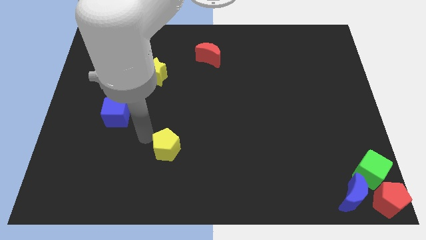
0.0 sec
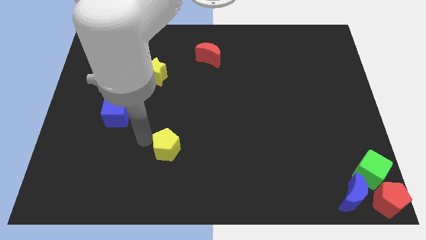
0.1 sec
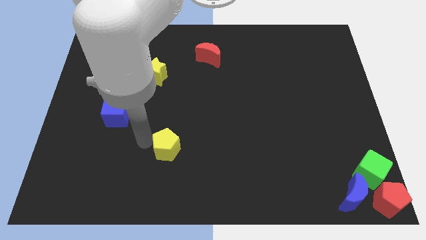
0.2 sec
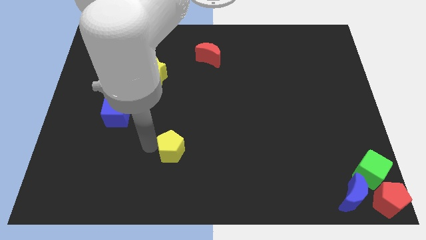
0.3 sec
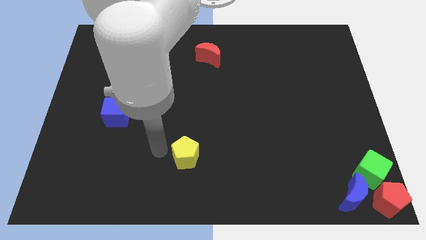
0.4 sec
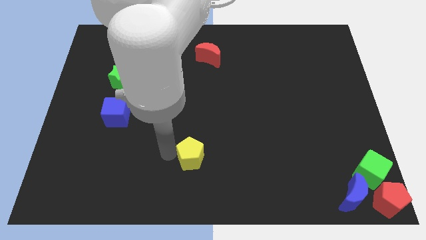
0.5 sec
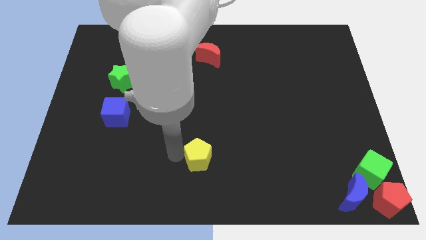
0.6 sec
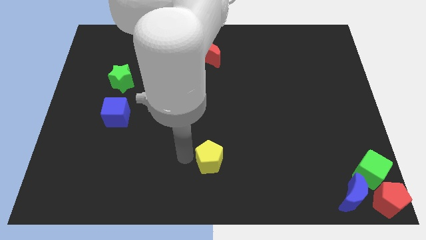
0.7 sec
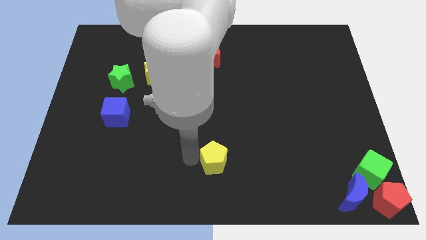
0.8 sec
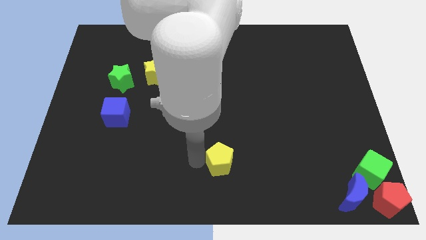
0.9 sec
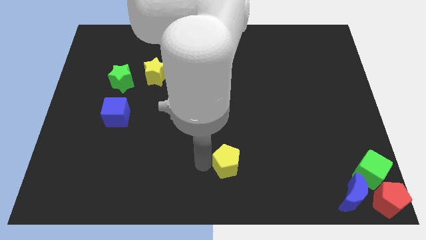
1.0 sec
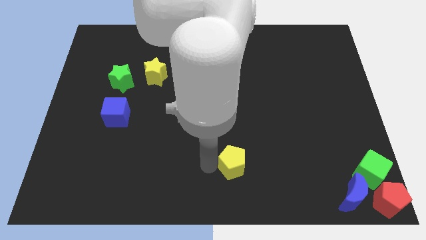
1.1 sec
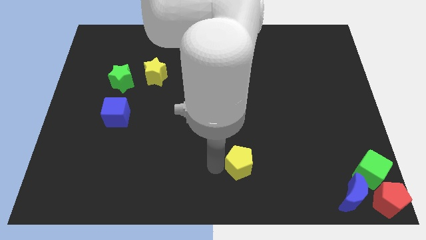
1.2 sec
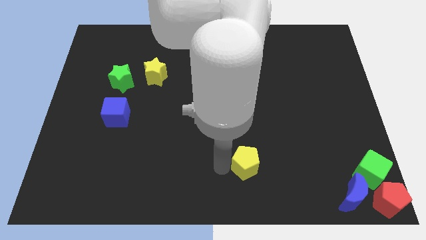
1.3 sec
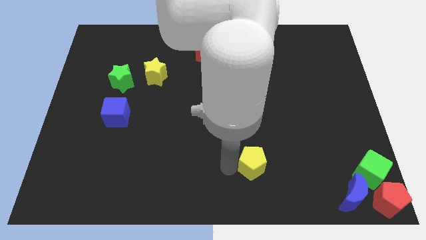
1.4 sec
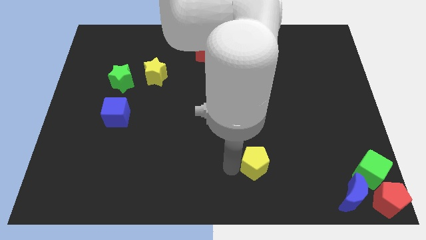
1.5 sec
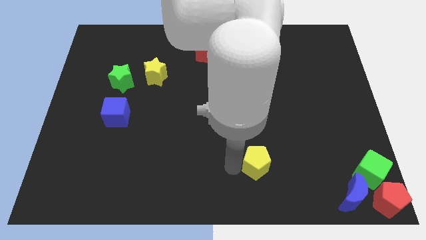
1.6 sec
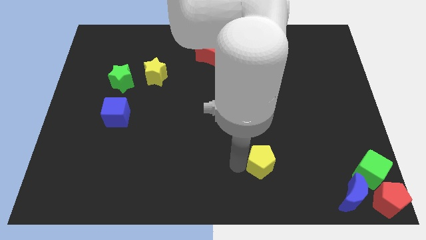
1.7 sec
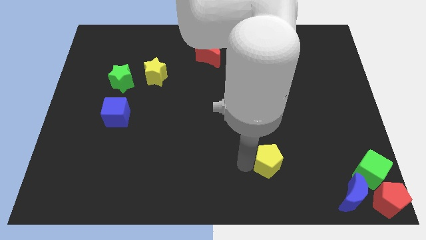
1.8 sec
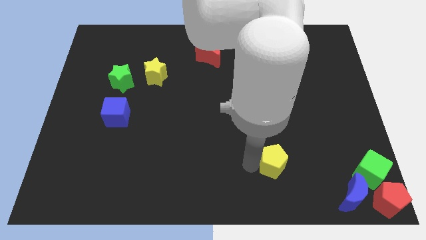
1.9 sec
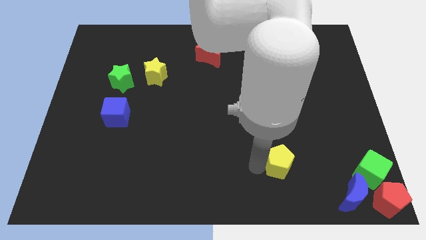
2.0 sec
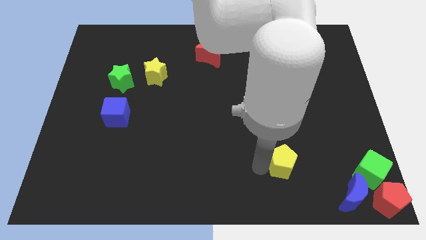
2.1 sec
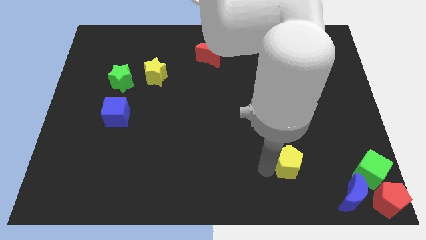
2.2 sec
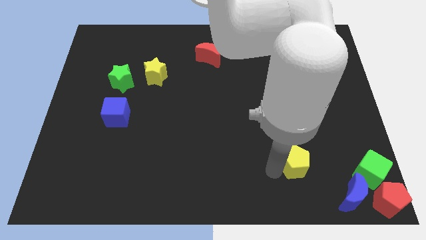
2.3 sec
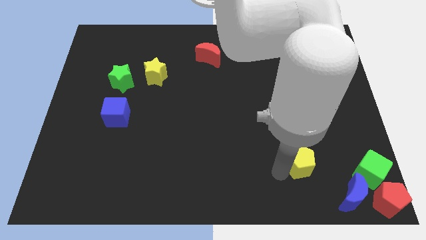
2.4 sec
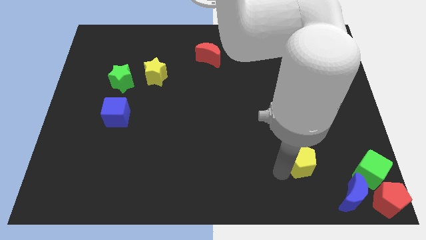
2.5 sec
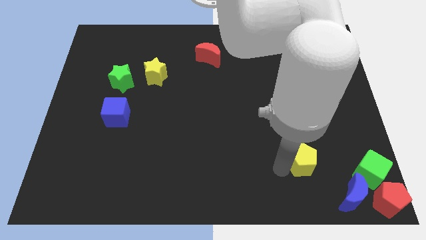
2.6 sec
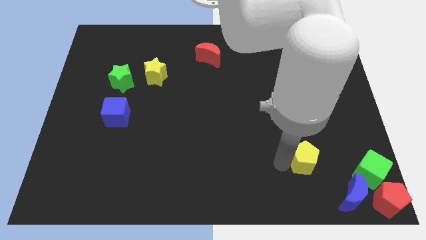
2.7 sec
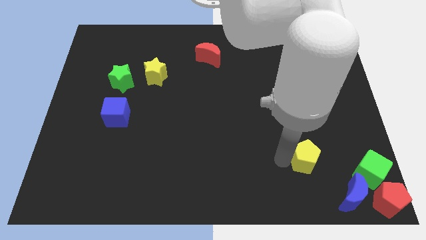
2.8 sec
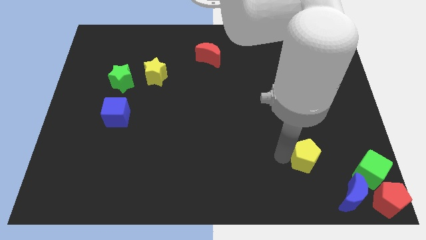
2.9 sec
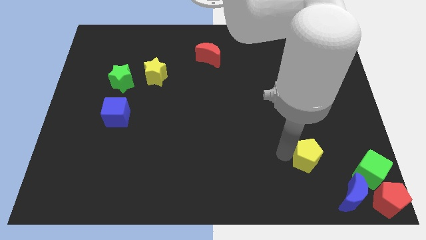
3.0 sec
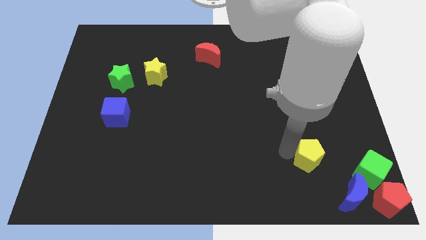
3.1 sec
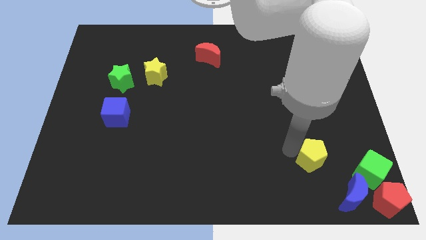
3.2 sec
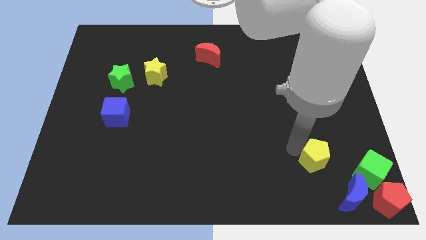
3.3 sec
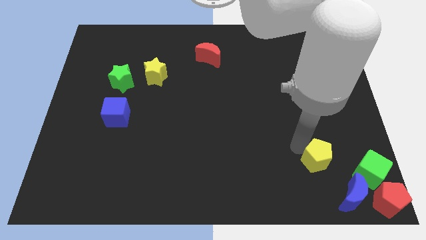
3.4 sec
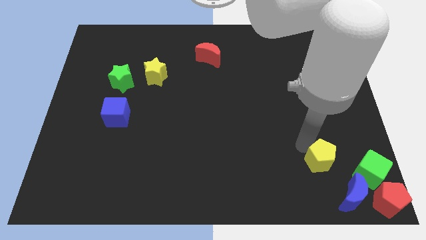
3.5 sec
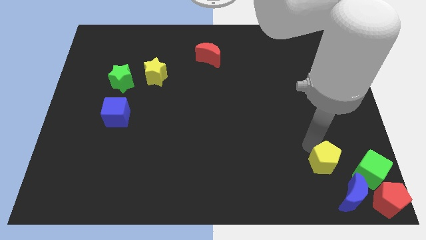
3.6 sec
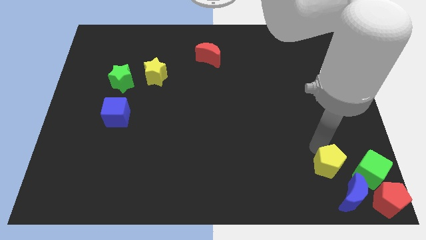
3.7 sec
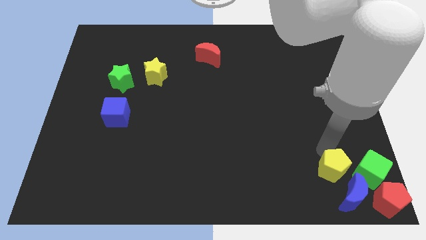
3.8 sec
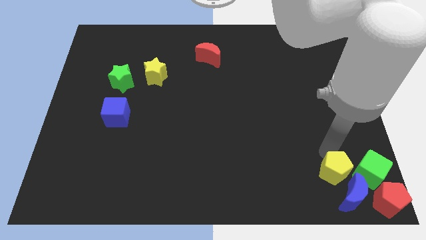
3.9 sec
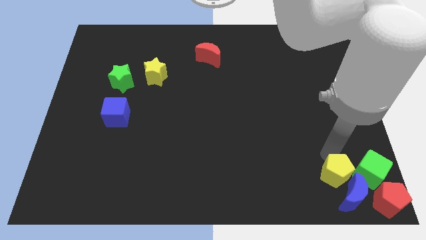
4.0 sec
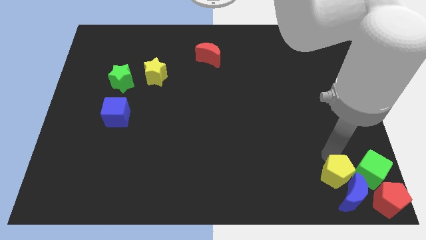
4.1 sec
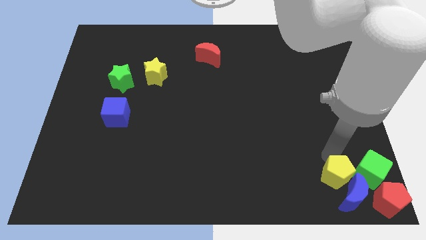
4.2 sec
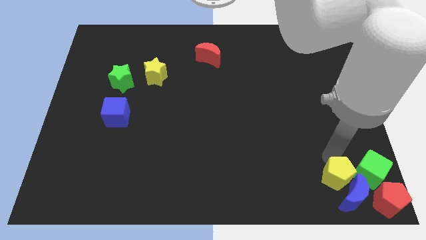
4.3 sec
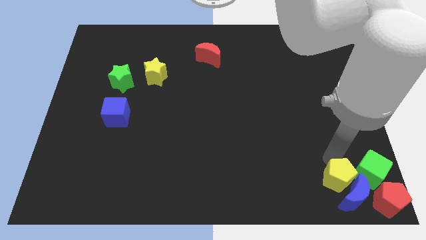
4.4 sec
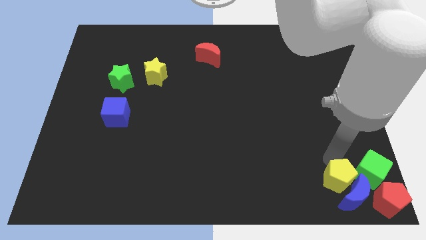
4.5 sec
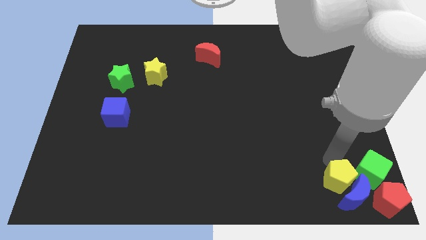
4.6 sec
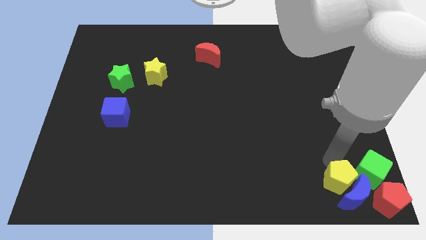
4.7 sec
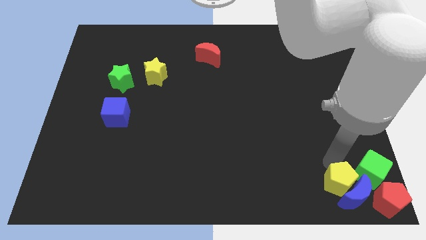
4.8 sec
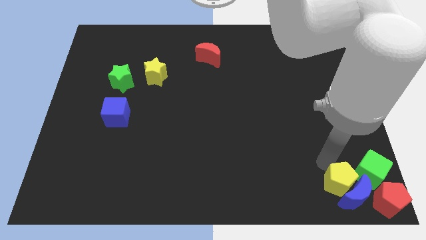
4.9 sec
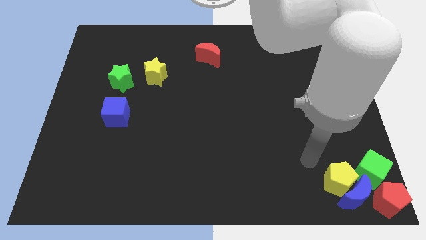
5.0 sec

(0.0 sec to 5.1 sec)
move the yellow pentagon into the blue crescent

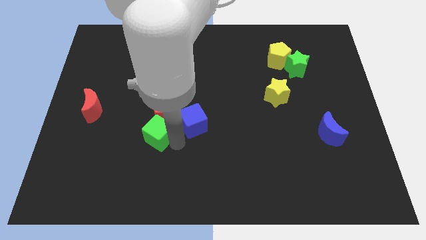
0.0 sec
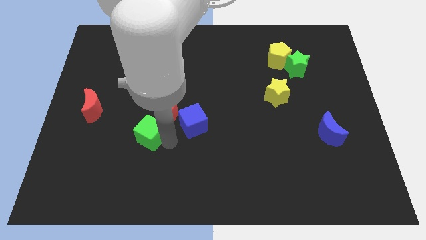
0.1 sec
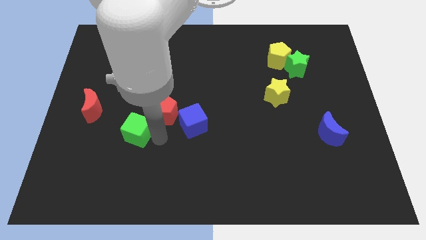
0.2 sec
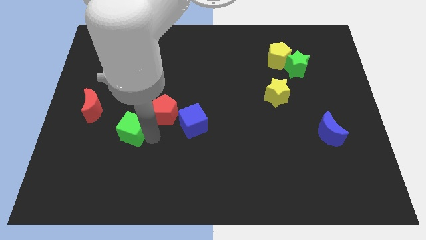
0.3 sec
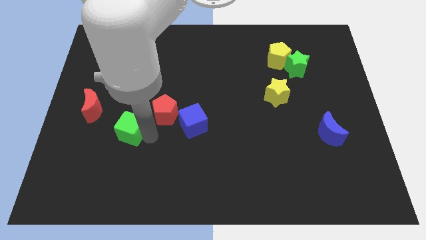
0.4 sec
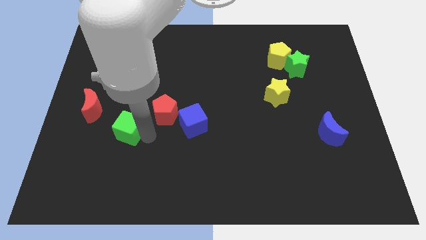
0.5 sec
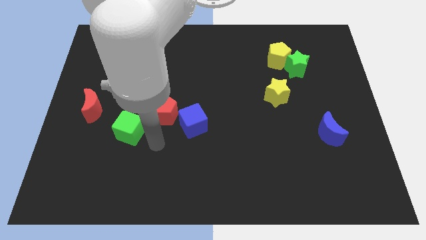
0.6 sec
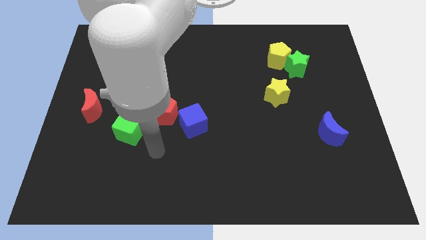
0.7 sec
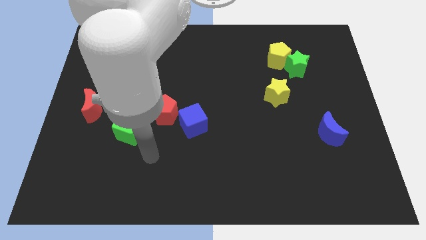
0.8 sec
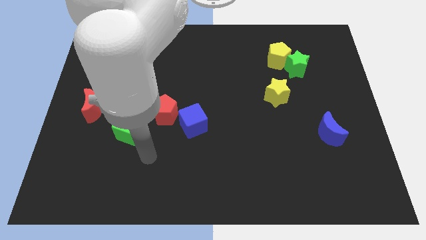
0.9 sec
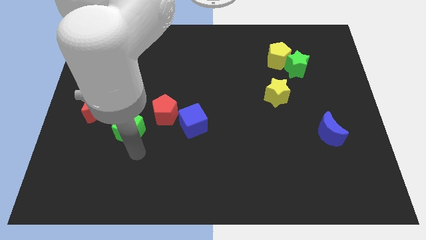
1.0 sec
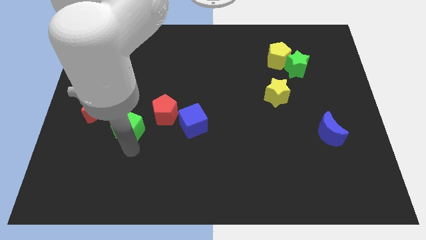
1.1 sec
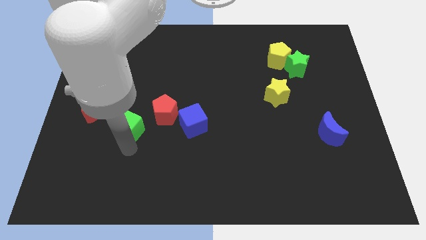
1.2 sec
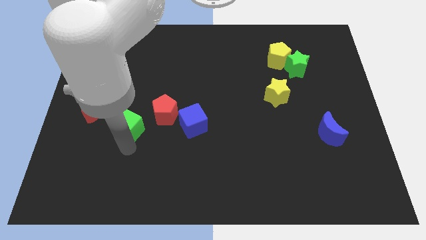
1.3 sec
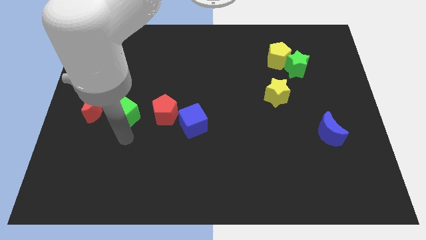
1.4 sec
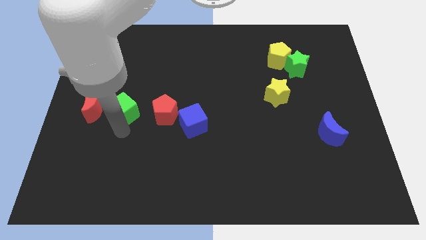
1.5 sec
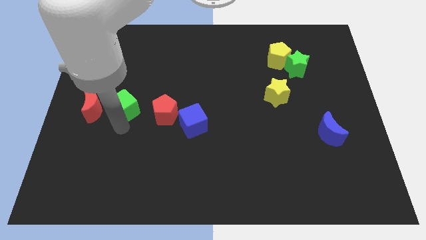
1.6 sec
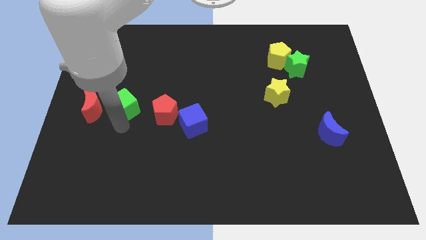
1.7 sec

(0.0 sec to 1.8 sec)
place the green cube in between the red moon and red pentagon

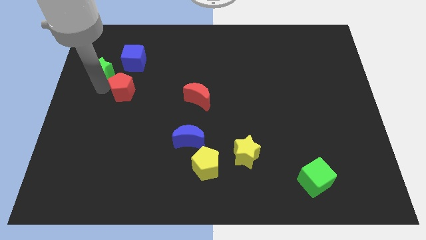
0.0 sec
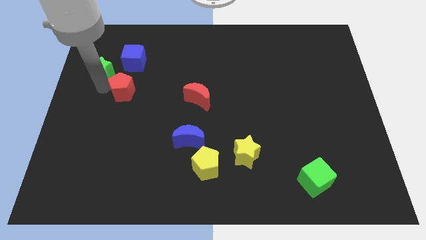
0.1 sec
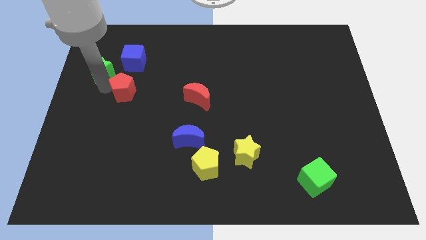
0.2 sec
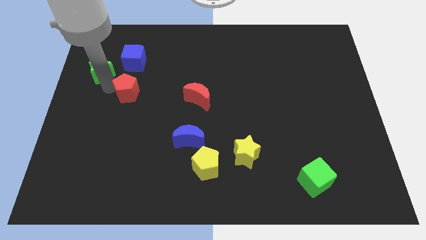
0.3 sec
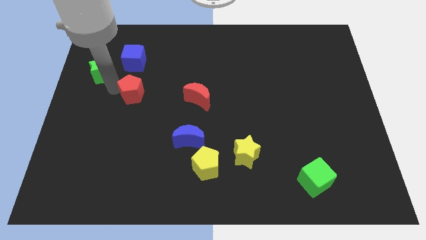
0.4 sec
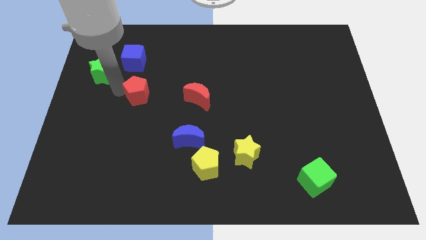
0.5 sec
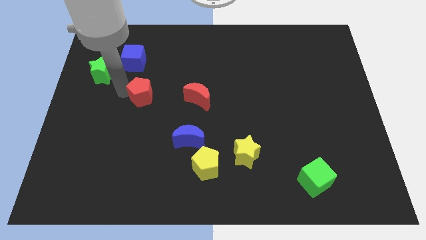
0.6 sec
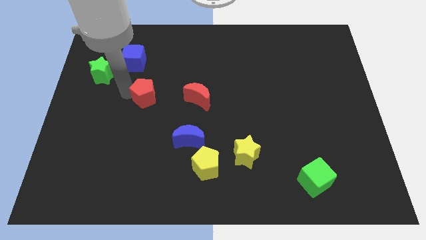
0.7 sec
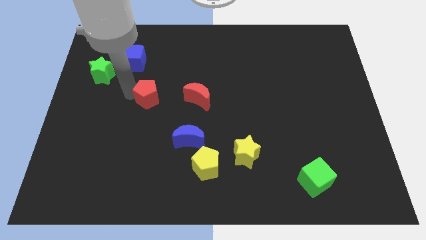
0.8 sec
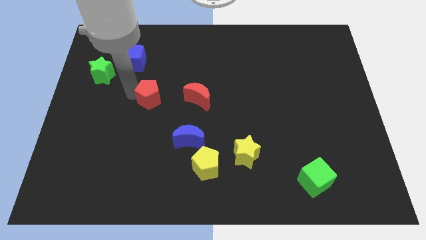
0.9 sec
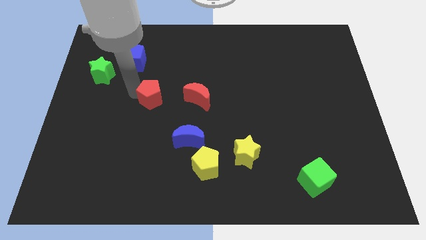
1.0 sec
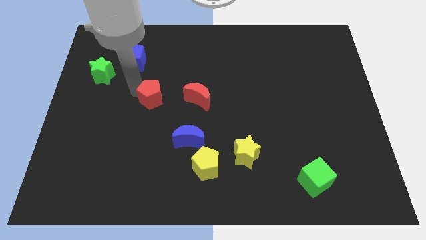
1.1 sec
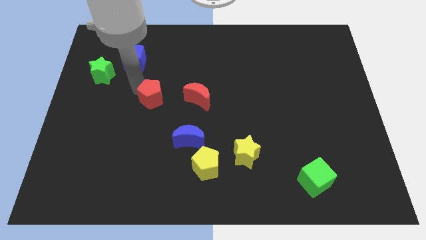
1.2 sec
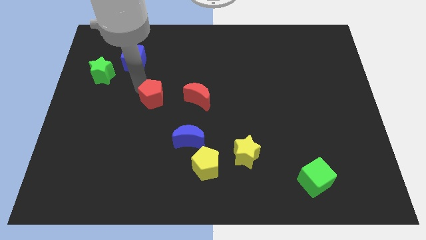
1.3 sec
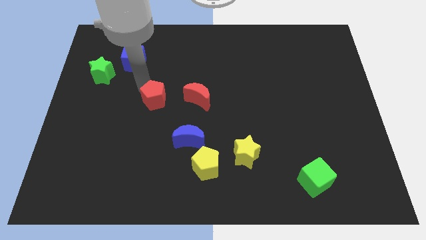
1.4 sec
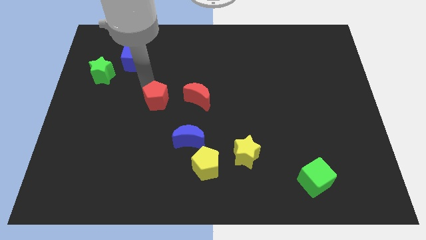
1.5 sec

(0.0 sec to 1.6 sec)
push the red pentagon away from green star

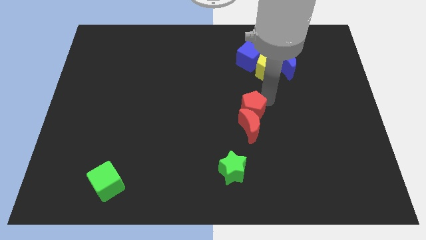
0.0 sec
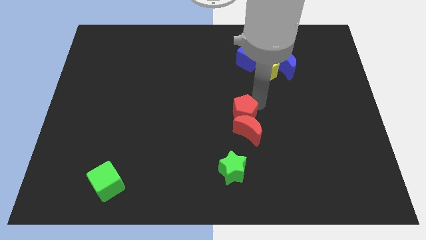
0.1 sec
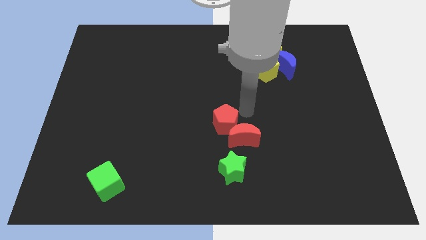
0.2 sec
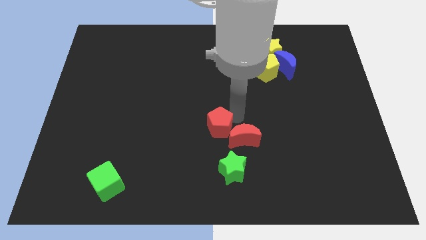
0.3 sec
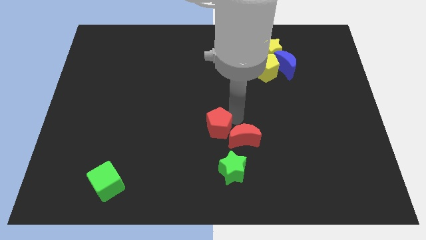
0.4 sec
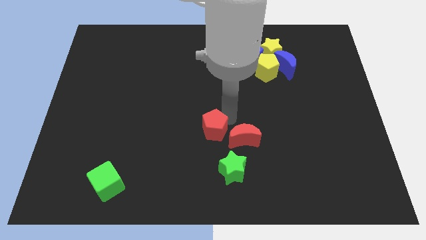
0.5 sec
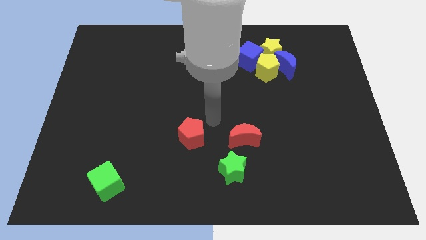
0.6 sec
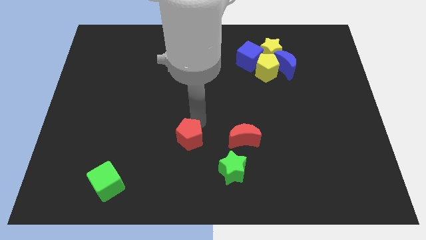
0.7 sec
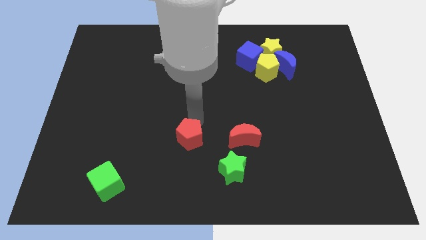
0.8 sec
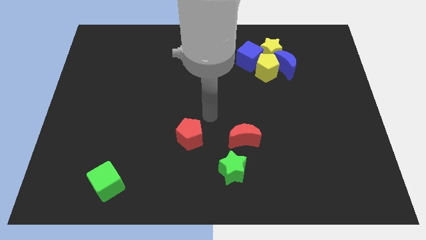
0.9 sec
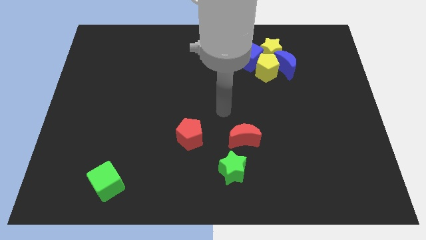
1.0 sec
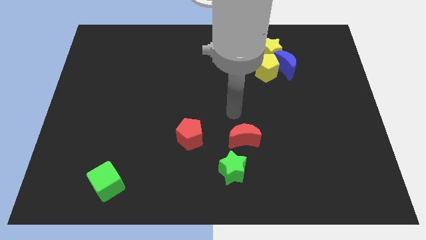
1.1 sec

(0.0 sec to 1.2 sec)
separate red pentagon from red moon
